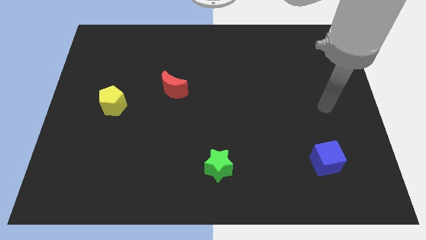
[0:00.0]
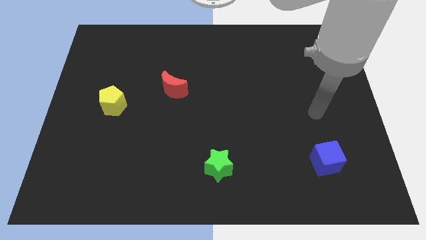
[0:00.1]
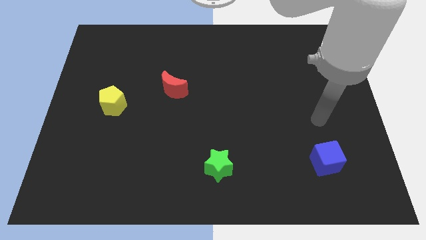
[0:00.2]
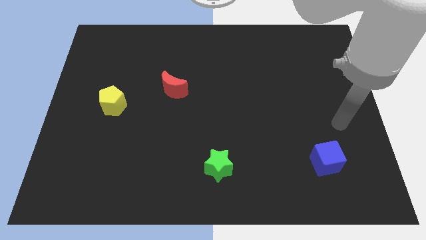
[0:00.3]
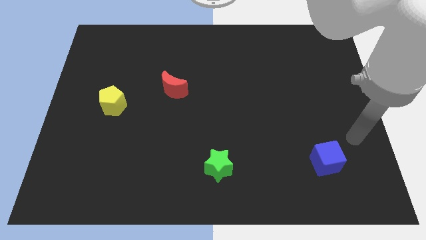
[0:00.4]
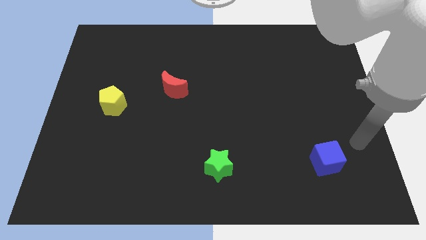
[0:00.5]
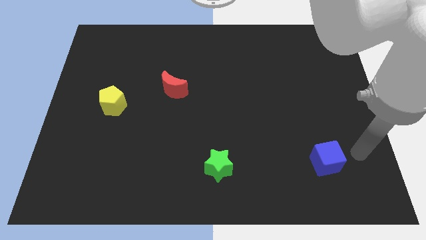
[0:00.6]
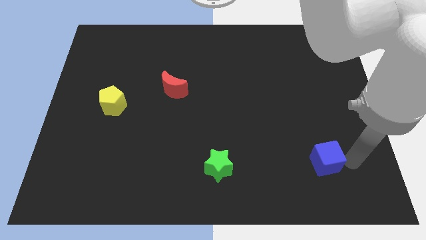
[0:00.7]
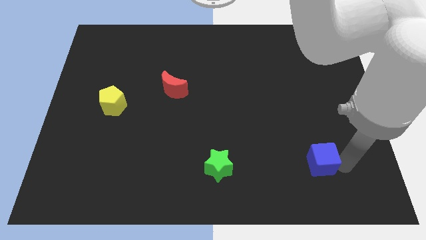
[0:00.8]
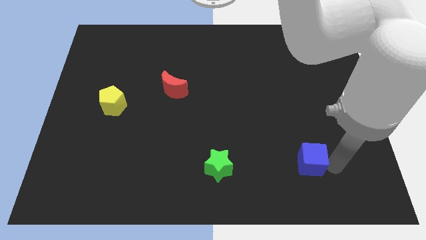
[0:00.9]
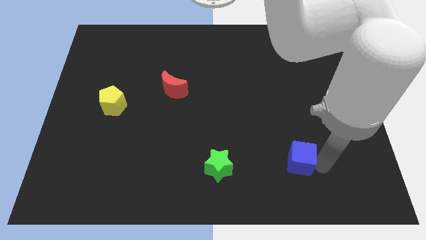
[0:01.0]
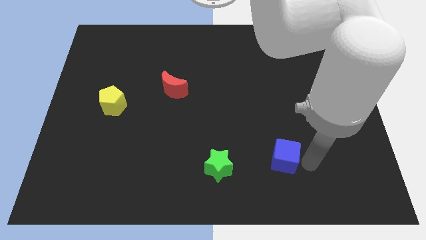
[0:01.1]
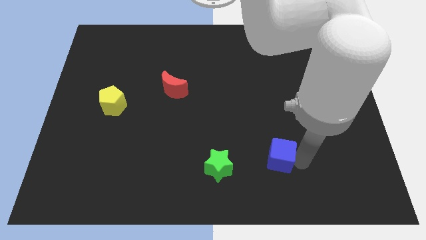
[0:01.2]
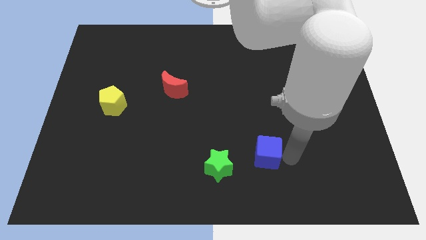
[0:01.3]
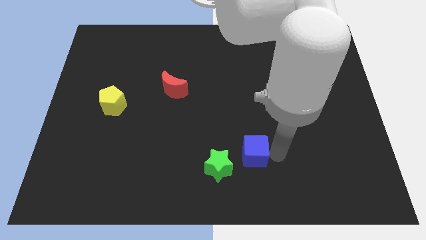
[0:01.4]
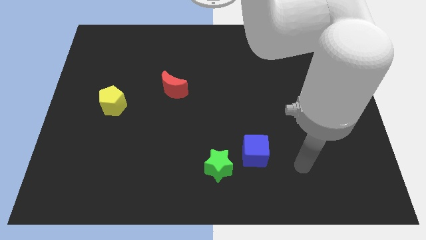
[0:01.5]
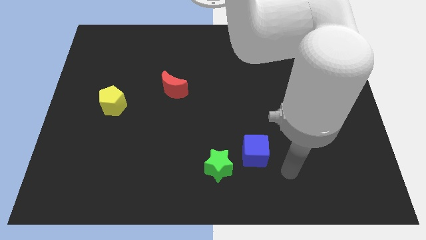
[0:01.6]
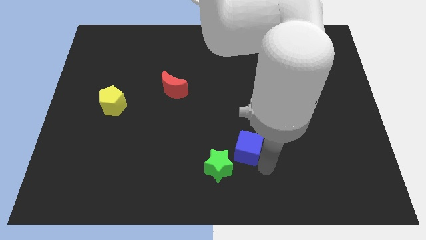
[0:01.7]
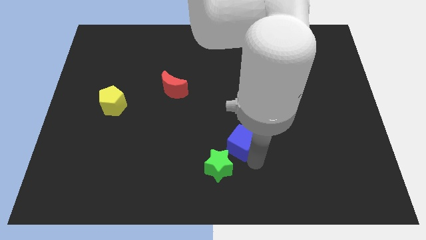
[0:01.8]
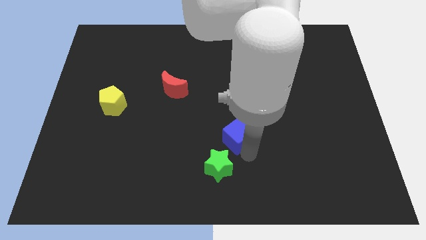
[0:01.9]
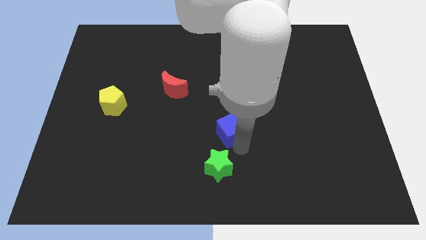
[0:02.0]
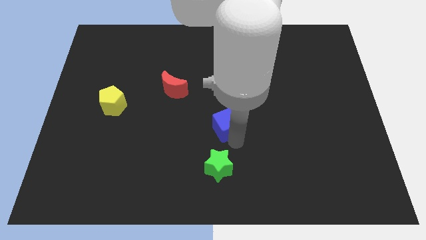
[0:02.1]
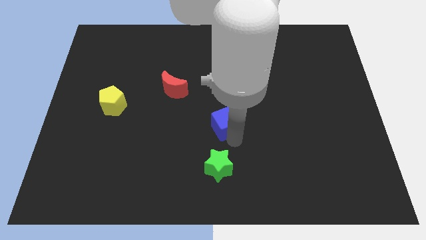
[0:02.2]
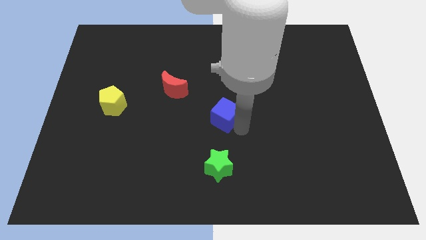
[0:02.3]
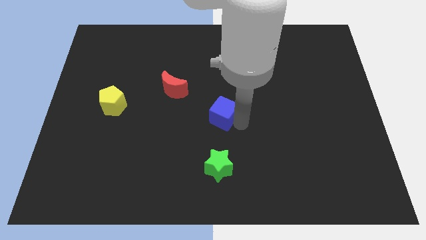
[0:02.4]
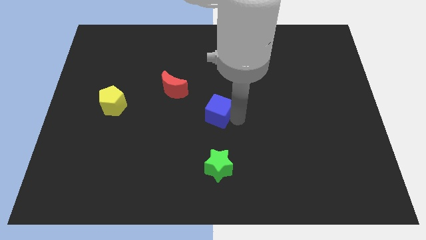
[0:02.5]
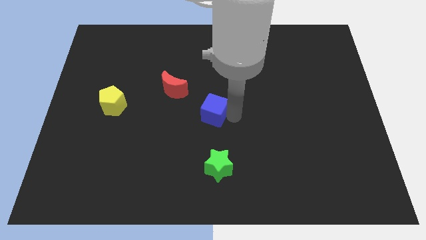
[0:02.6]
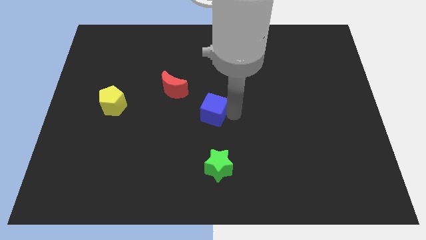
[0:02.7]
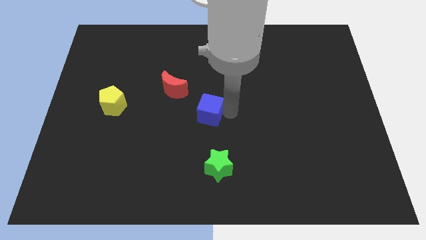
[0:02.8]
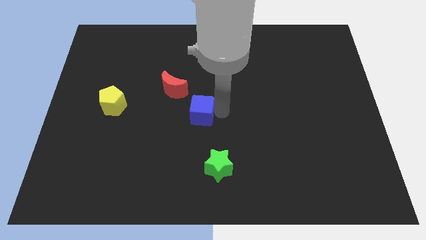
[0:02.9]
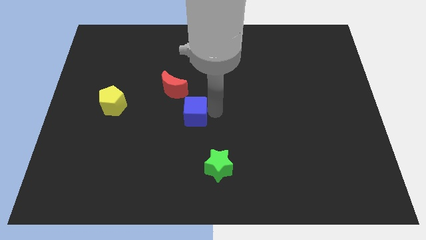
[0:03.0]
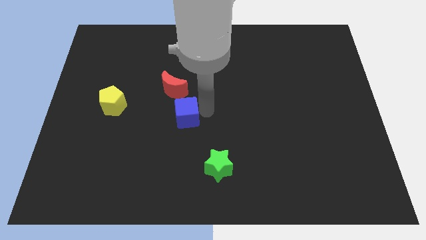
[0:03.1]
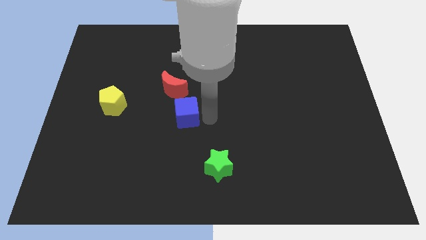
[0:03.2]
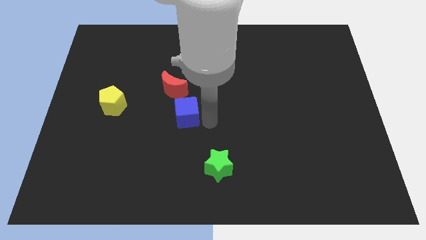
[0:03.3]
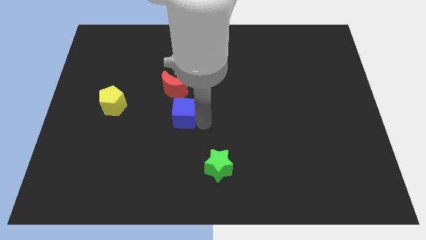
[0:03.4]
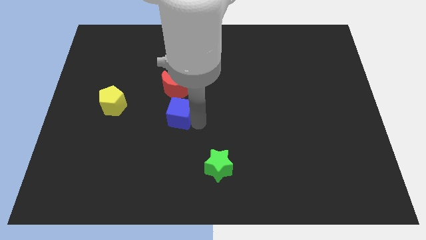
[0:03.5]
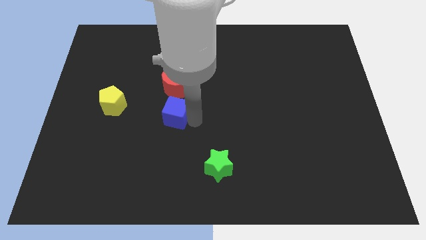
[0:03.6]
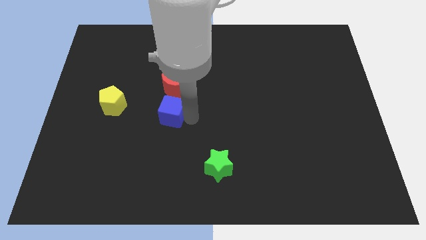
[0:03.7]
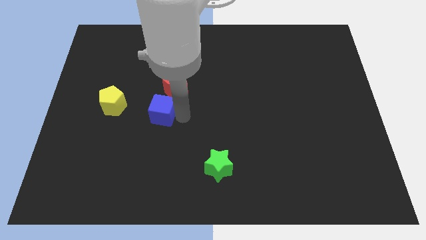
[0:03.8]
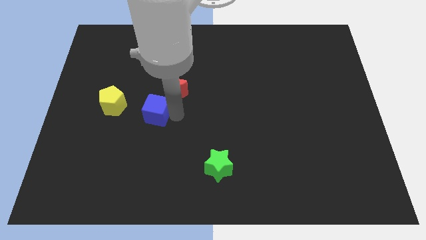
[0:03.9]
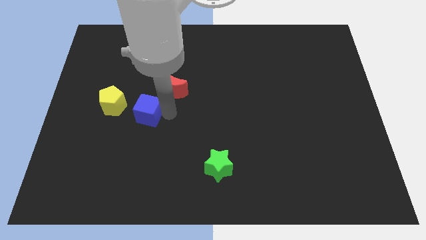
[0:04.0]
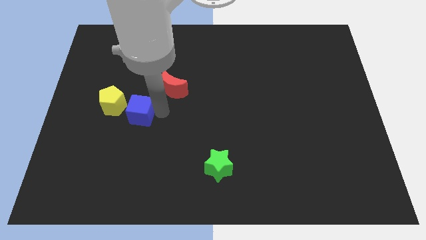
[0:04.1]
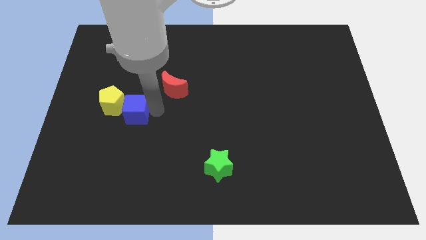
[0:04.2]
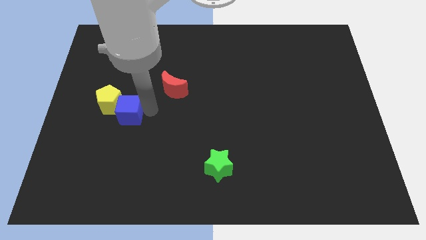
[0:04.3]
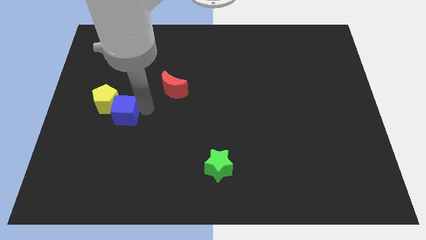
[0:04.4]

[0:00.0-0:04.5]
push the blue block close to the yellow pentagon

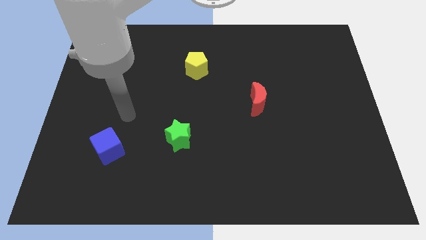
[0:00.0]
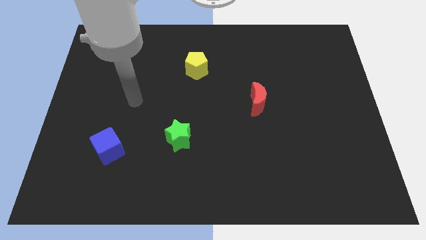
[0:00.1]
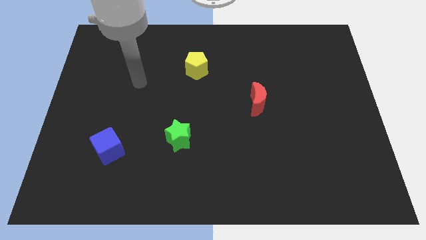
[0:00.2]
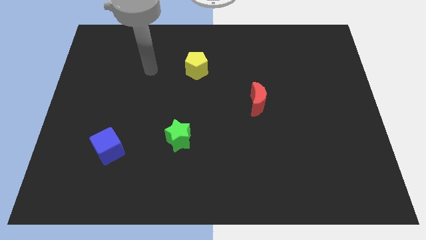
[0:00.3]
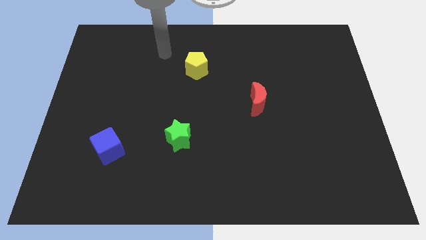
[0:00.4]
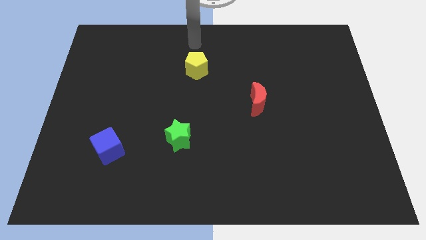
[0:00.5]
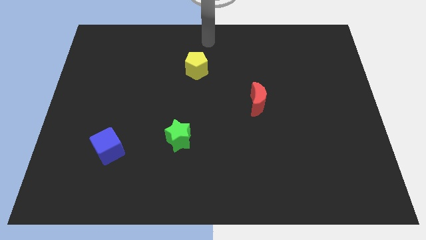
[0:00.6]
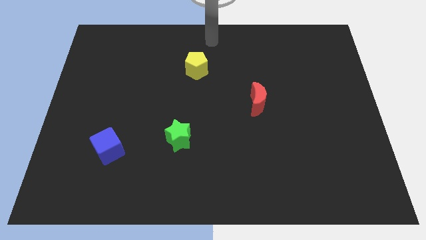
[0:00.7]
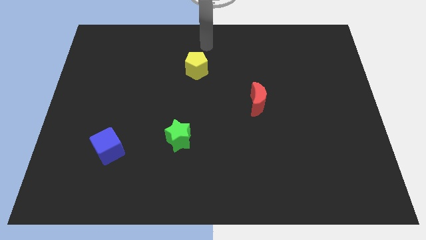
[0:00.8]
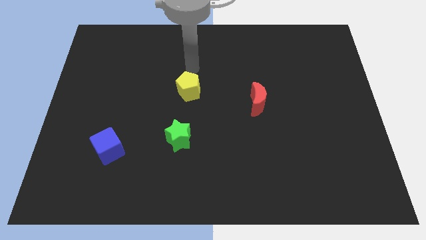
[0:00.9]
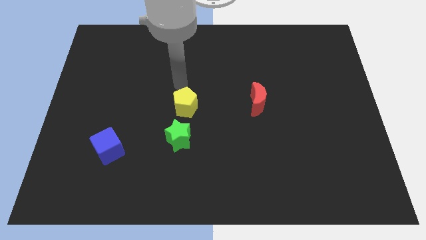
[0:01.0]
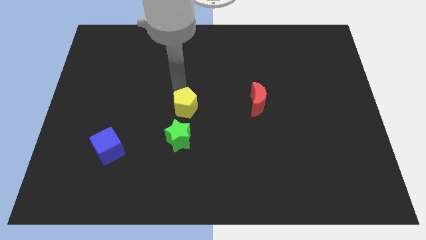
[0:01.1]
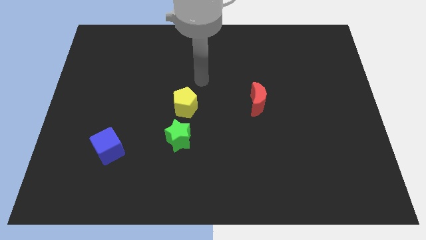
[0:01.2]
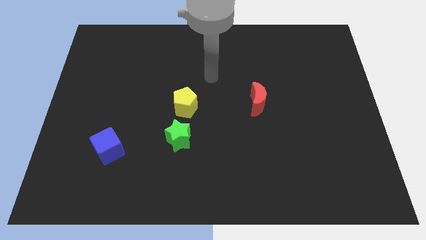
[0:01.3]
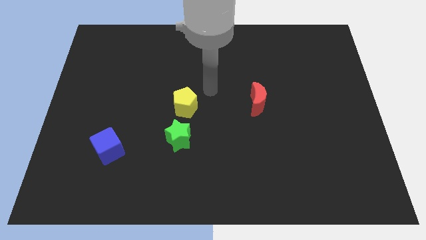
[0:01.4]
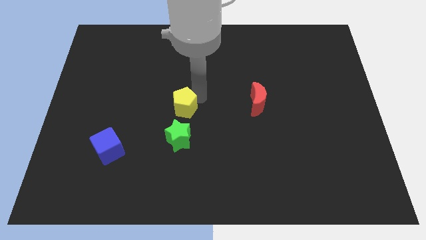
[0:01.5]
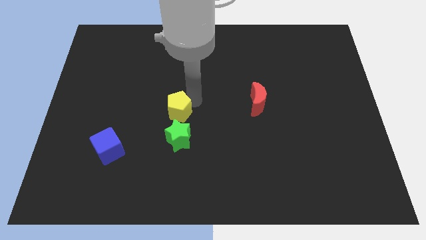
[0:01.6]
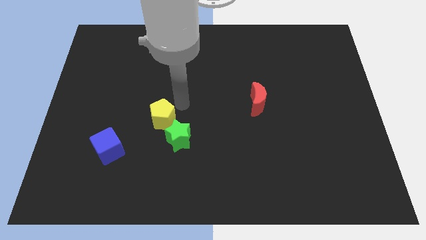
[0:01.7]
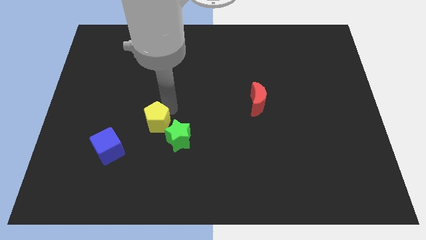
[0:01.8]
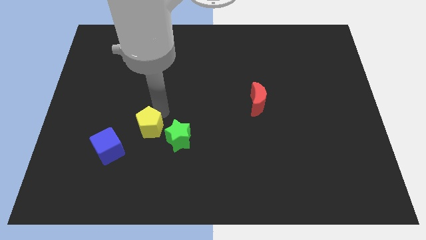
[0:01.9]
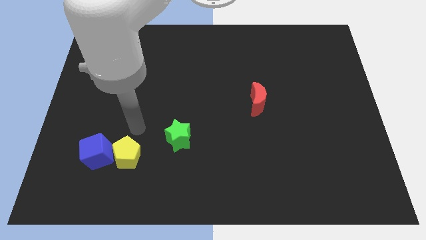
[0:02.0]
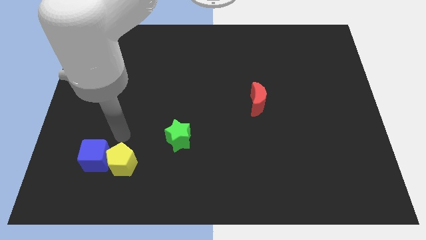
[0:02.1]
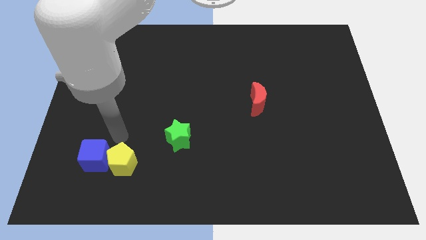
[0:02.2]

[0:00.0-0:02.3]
slide the pentagon towards the blue cube

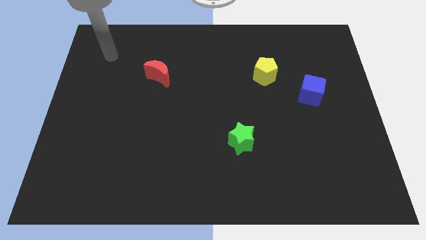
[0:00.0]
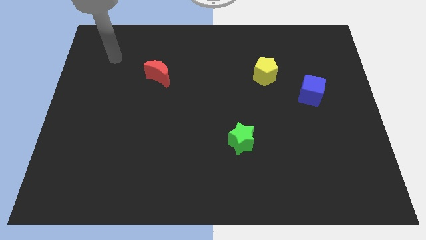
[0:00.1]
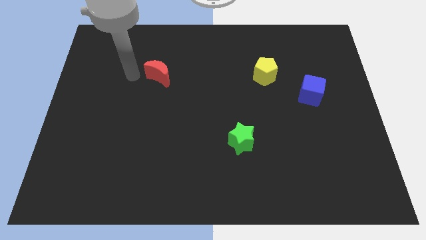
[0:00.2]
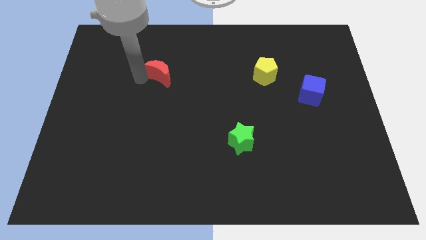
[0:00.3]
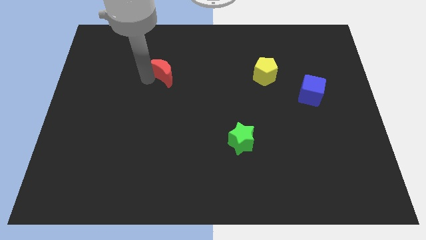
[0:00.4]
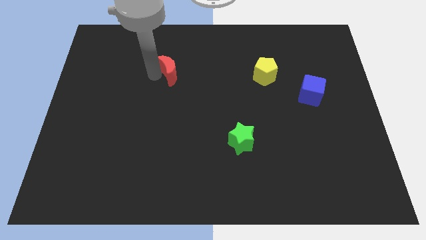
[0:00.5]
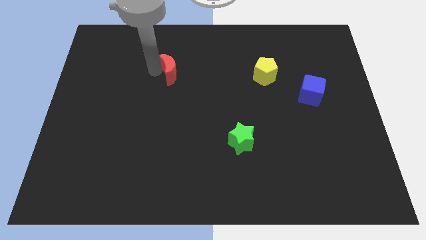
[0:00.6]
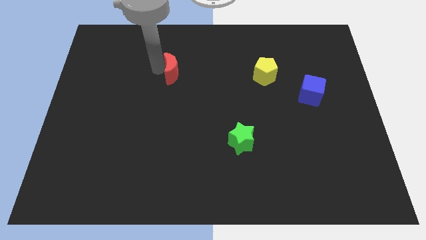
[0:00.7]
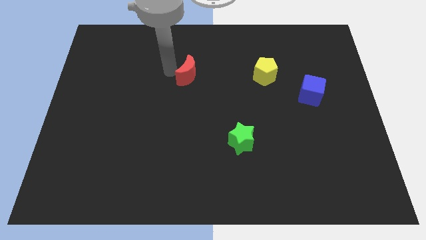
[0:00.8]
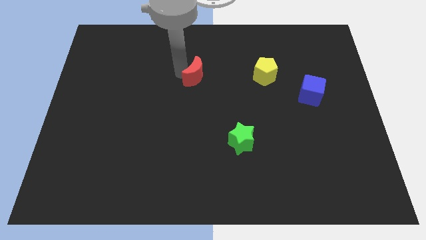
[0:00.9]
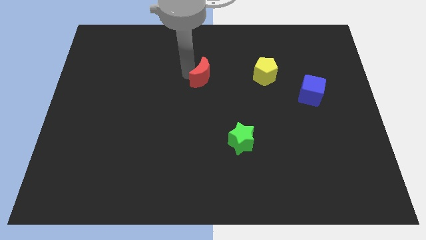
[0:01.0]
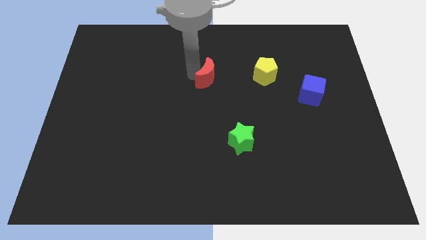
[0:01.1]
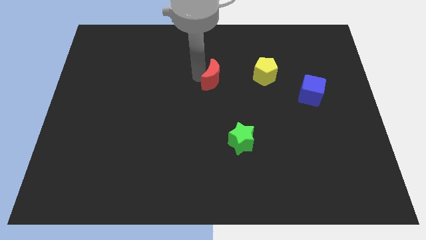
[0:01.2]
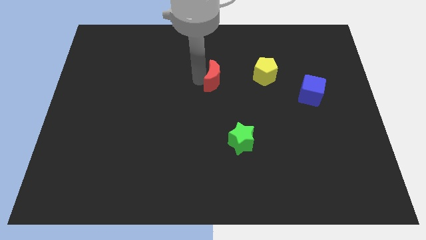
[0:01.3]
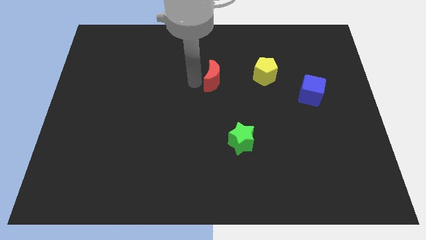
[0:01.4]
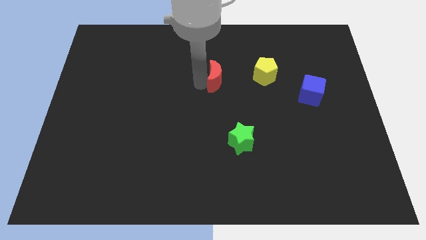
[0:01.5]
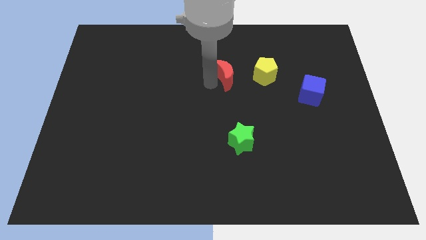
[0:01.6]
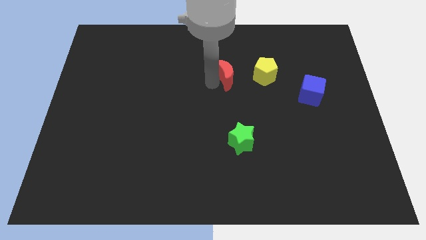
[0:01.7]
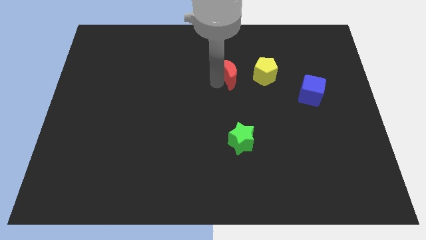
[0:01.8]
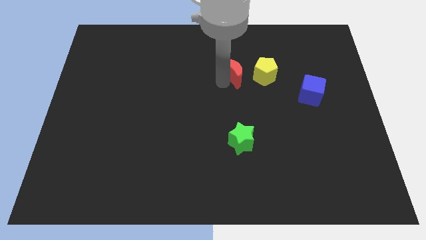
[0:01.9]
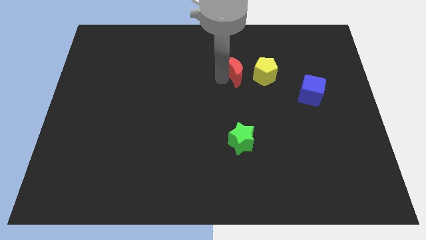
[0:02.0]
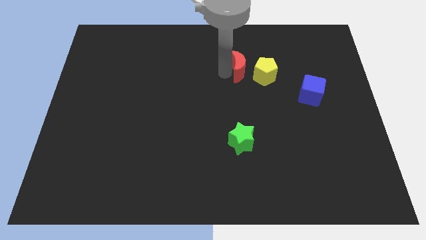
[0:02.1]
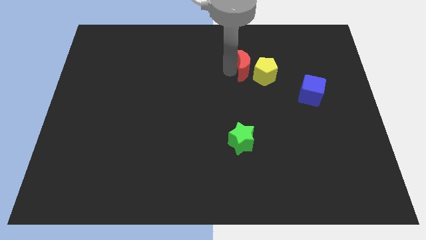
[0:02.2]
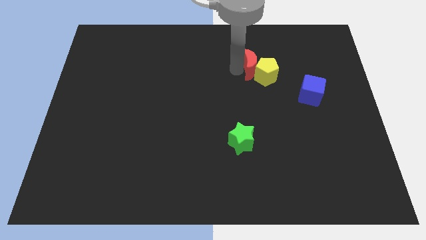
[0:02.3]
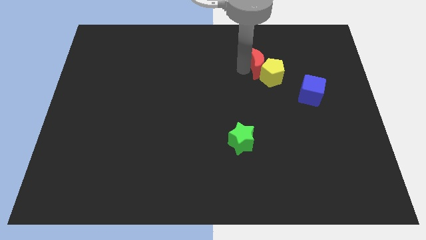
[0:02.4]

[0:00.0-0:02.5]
put the red block close to the pentagon
